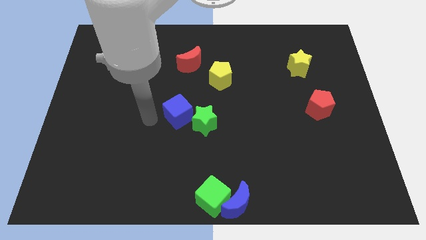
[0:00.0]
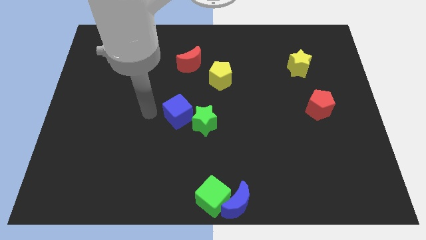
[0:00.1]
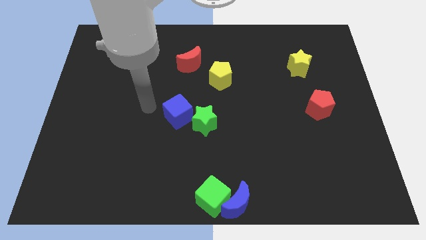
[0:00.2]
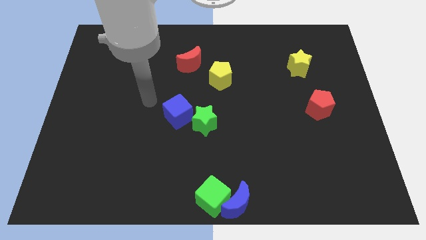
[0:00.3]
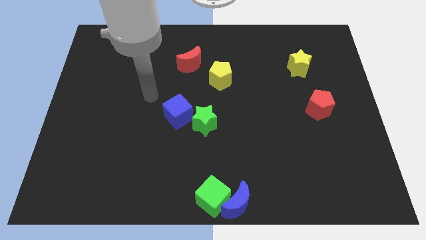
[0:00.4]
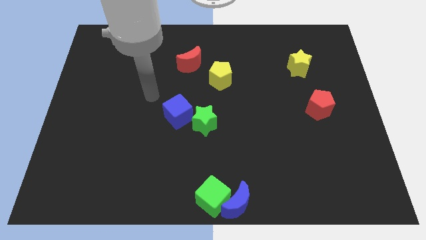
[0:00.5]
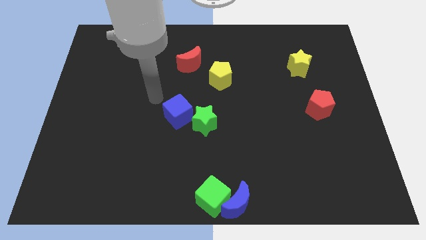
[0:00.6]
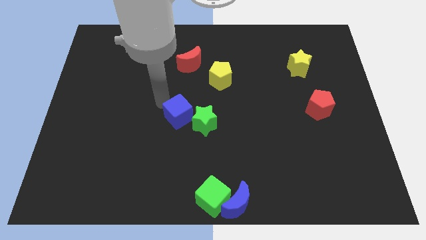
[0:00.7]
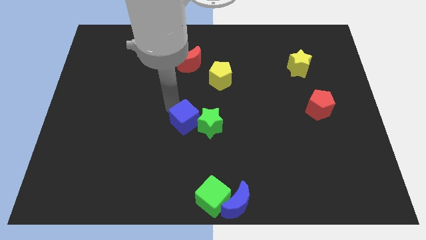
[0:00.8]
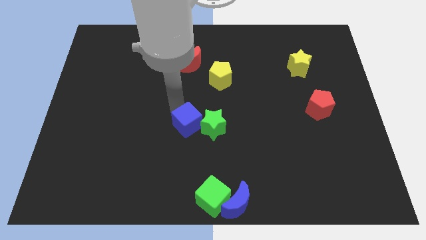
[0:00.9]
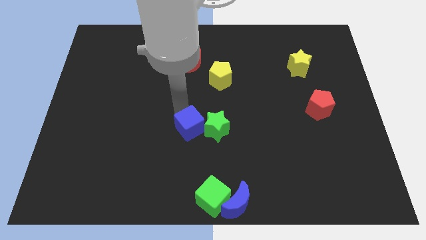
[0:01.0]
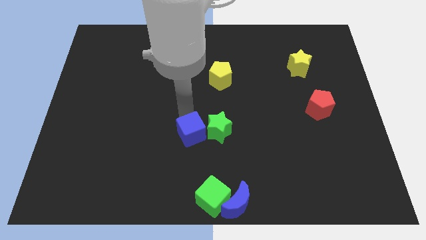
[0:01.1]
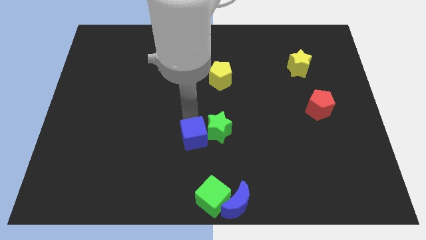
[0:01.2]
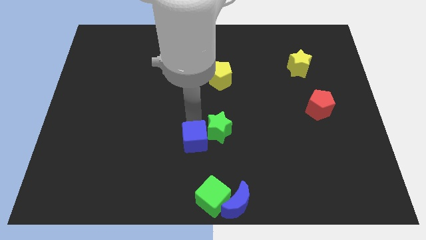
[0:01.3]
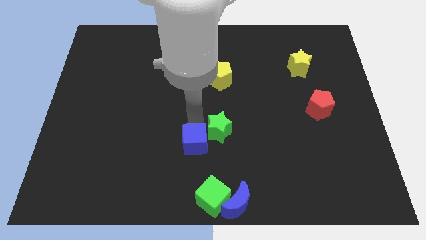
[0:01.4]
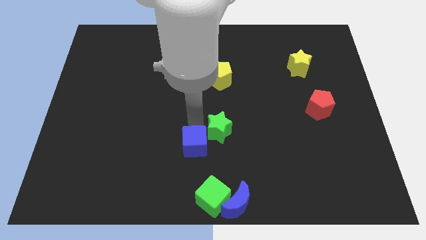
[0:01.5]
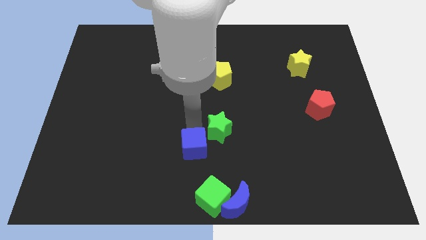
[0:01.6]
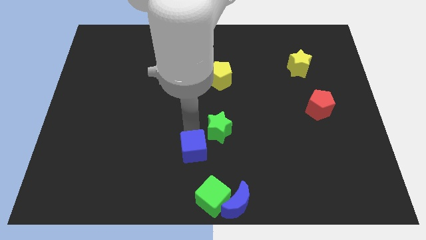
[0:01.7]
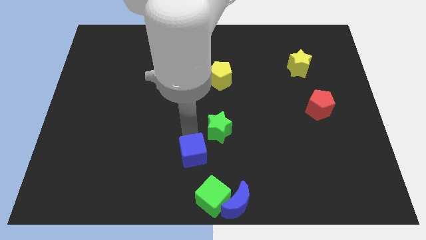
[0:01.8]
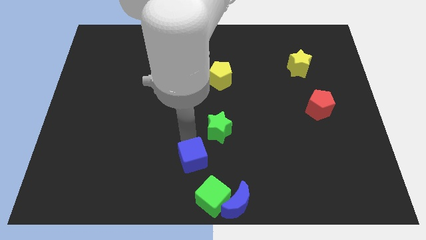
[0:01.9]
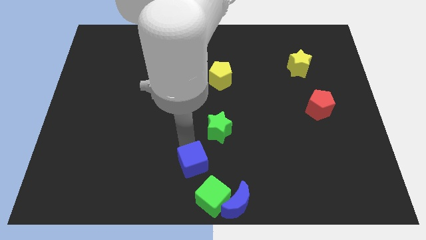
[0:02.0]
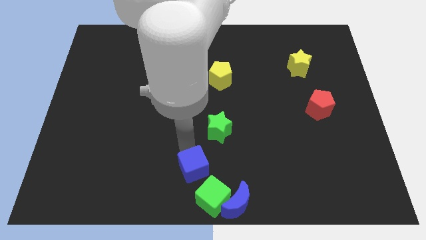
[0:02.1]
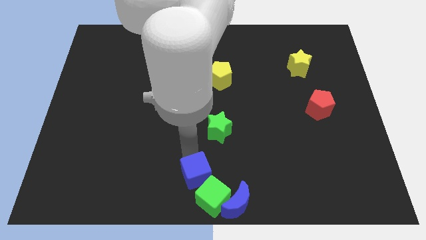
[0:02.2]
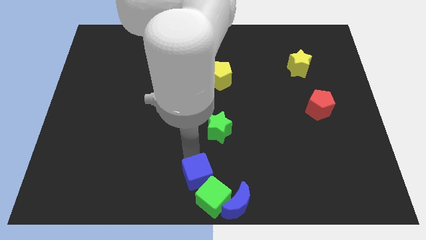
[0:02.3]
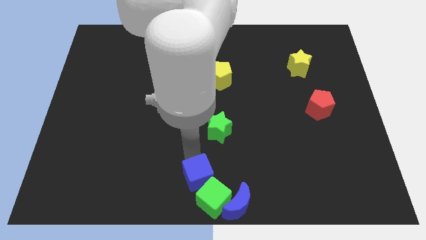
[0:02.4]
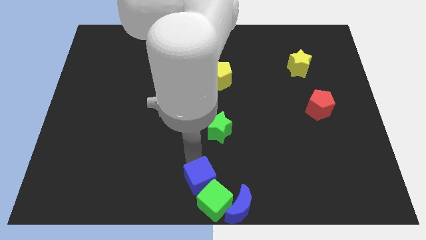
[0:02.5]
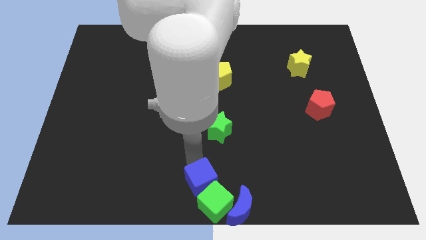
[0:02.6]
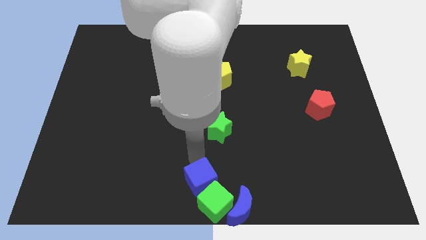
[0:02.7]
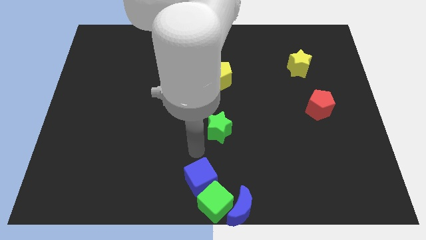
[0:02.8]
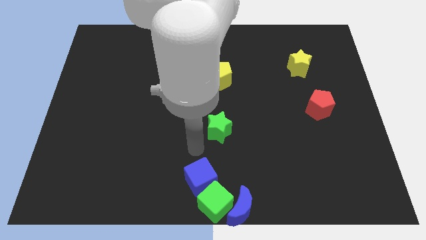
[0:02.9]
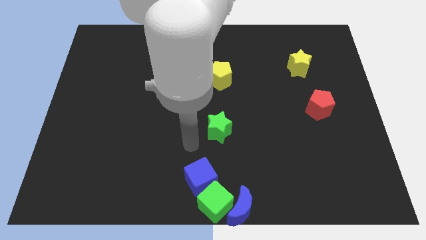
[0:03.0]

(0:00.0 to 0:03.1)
separate blue cube from green star

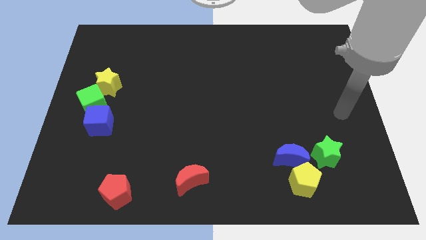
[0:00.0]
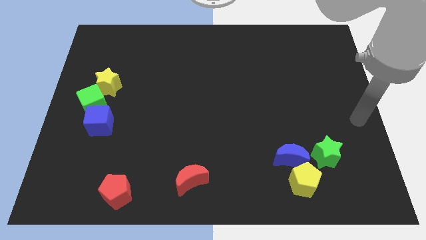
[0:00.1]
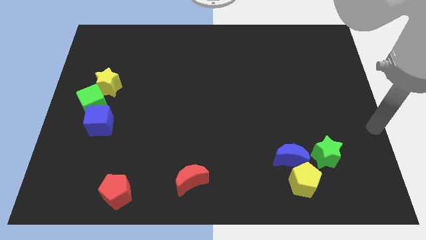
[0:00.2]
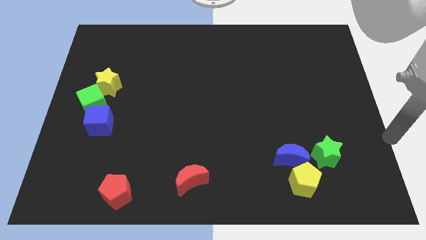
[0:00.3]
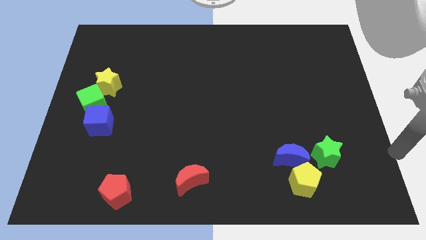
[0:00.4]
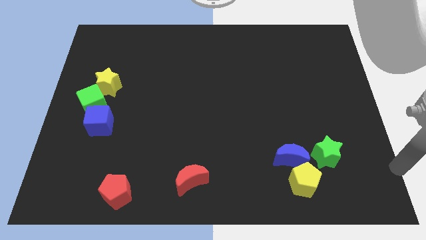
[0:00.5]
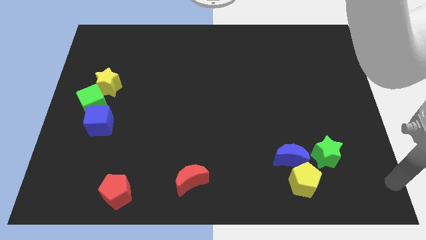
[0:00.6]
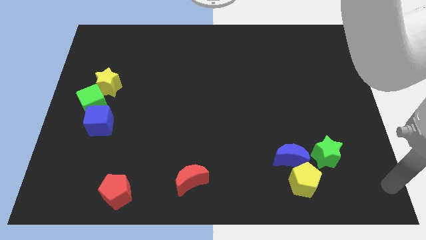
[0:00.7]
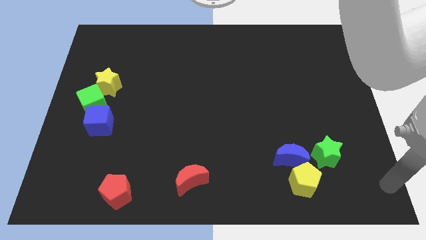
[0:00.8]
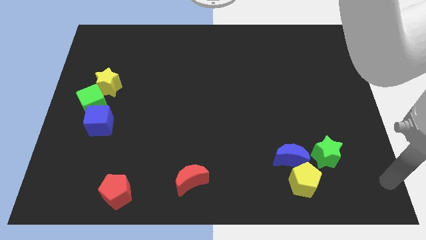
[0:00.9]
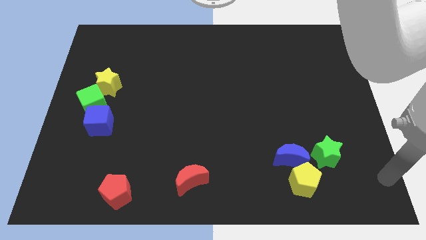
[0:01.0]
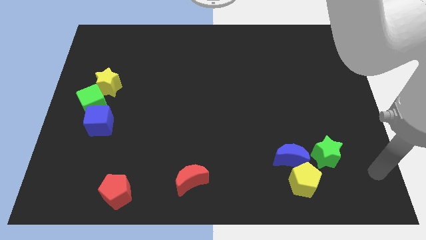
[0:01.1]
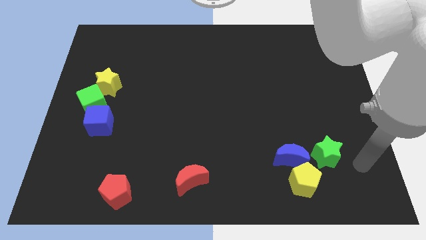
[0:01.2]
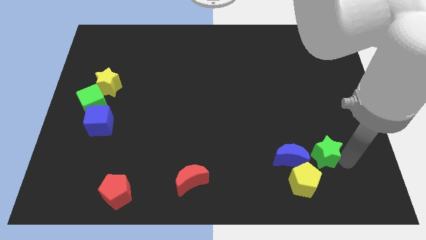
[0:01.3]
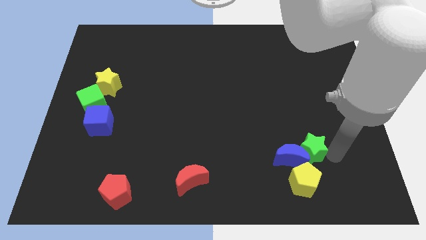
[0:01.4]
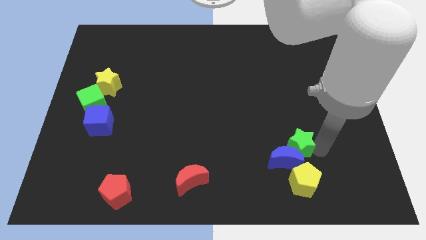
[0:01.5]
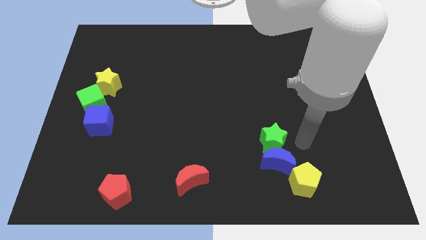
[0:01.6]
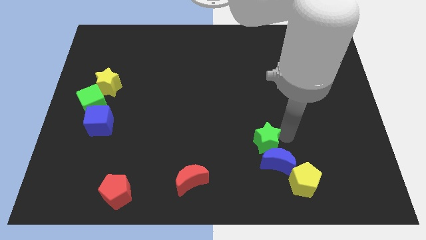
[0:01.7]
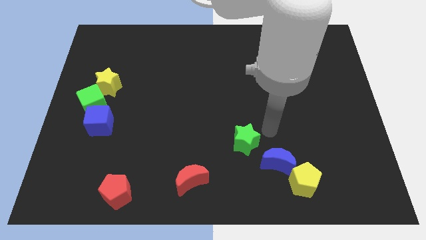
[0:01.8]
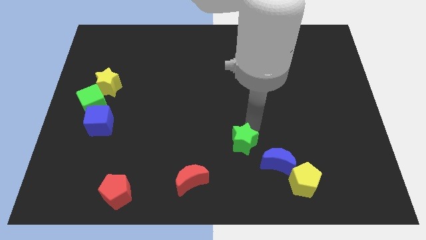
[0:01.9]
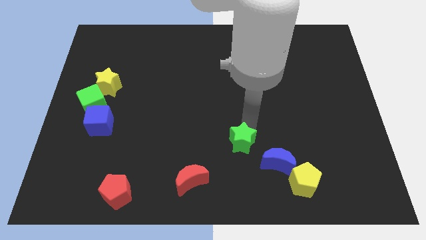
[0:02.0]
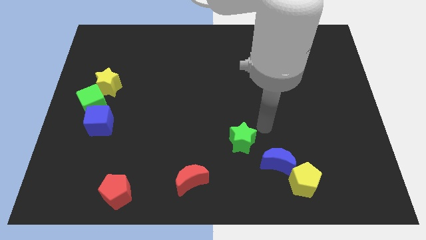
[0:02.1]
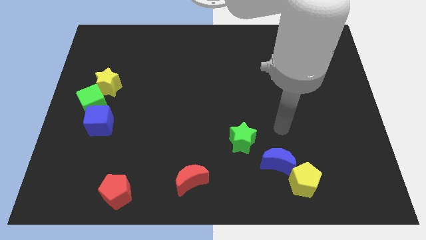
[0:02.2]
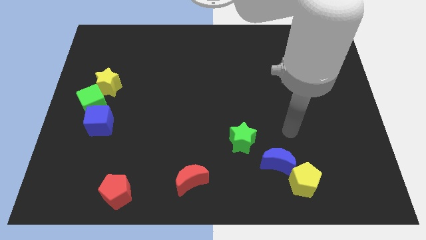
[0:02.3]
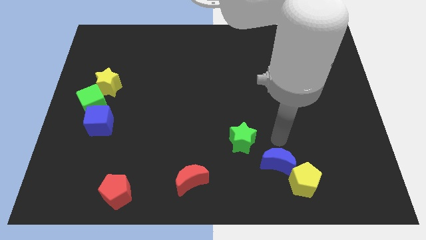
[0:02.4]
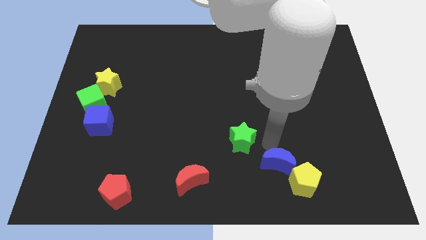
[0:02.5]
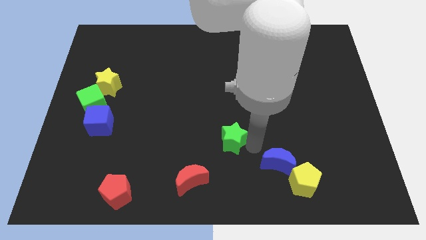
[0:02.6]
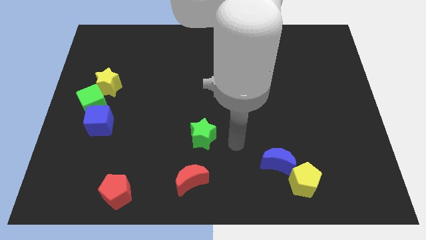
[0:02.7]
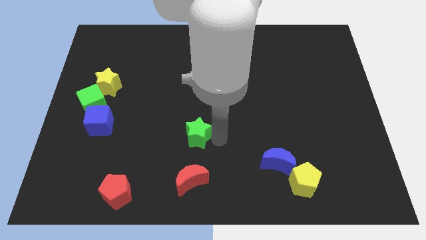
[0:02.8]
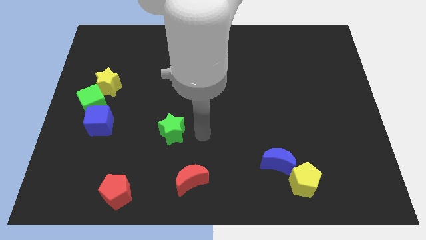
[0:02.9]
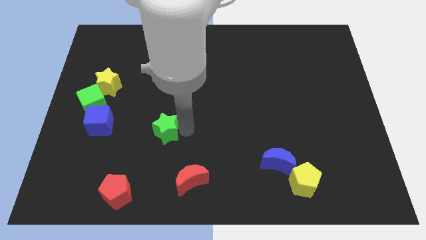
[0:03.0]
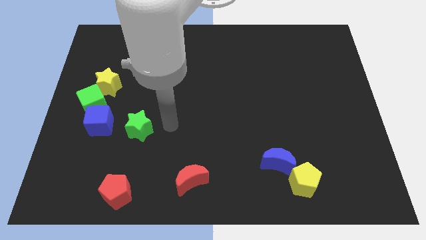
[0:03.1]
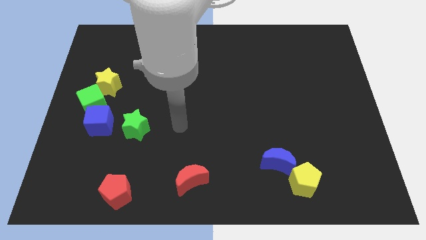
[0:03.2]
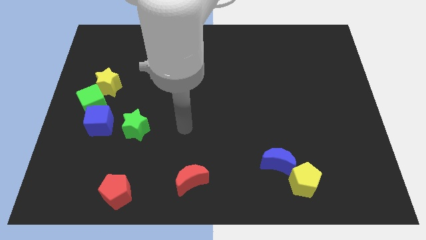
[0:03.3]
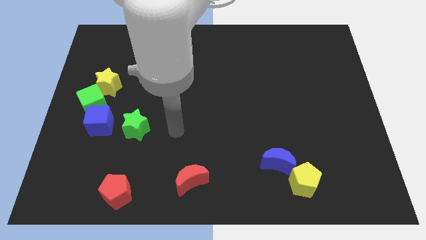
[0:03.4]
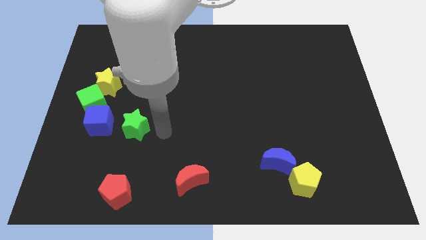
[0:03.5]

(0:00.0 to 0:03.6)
move green star to the right of blue cube

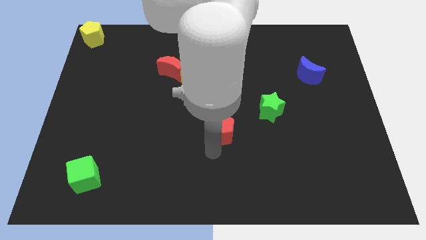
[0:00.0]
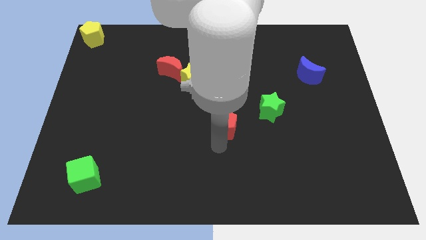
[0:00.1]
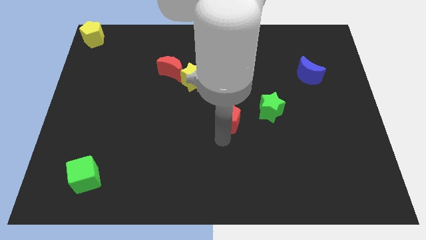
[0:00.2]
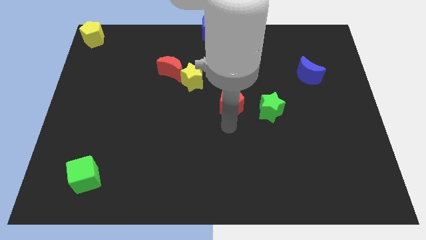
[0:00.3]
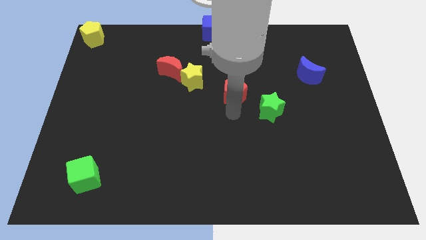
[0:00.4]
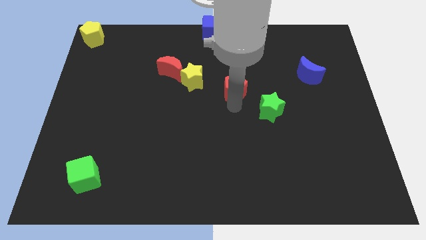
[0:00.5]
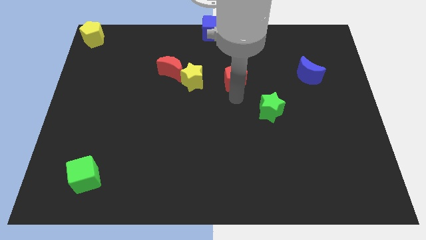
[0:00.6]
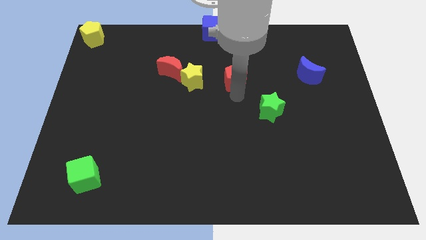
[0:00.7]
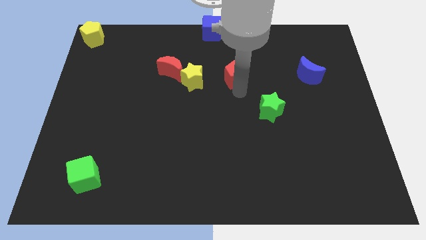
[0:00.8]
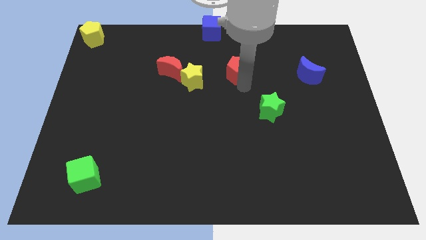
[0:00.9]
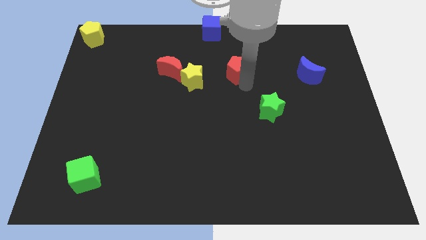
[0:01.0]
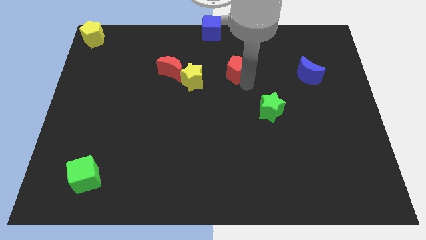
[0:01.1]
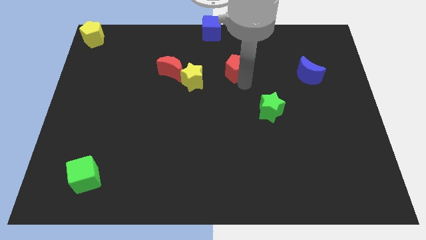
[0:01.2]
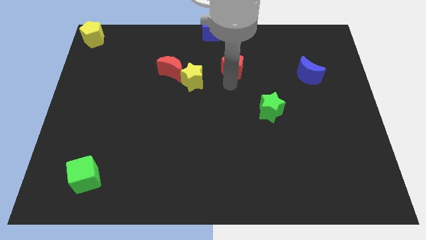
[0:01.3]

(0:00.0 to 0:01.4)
move red pentagon slightly up

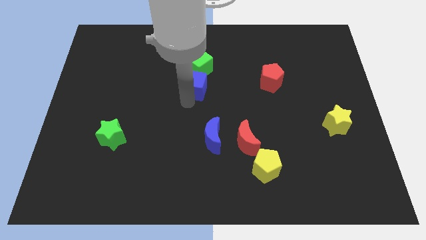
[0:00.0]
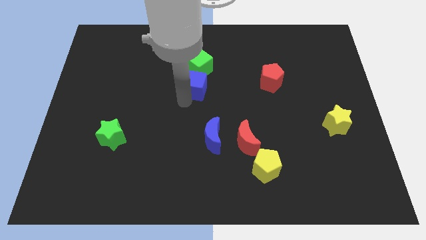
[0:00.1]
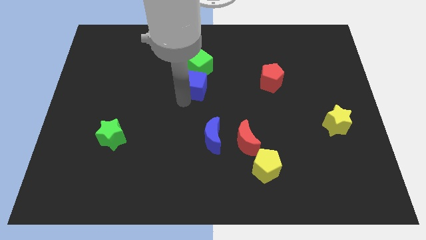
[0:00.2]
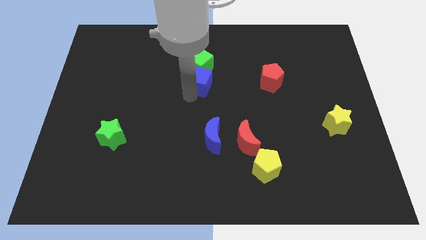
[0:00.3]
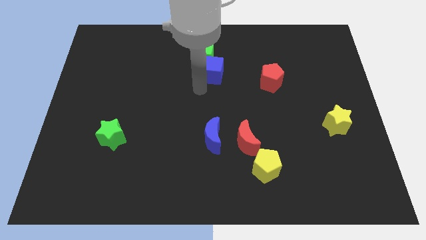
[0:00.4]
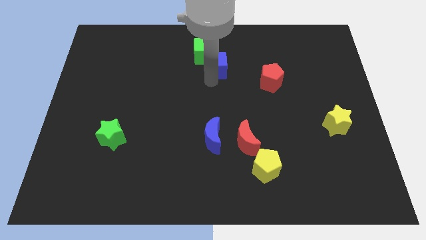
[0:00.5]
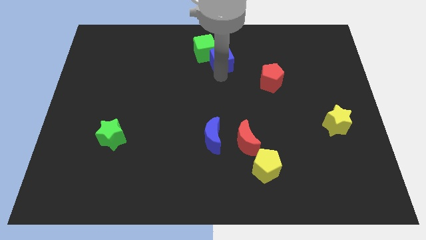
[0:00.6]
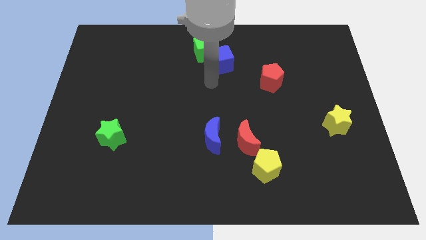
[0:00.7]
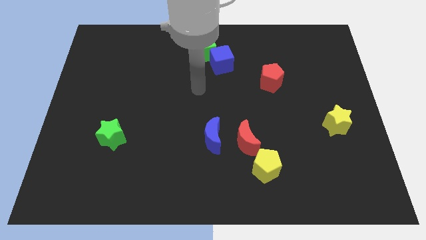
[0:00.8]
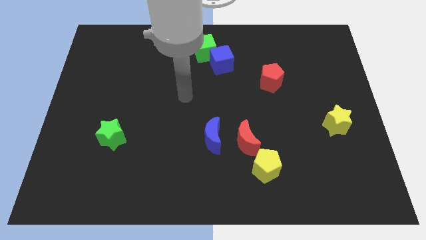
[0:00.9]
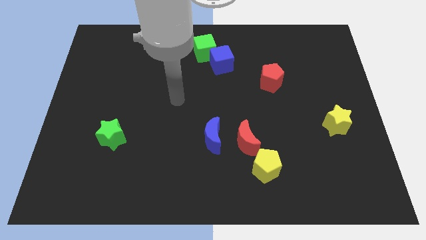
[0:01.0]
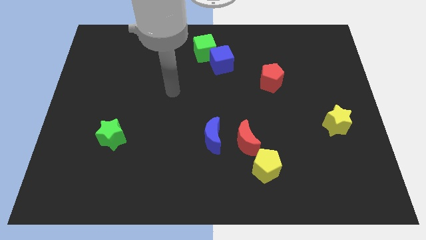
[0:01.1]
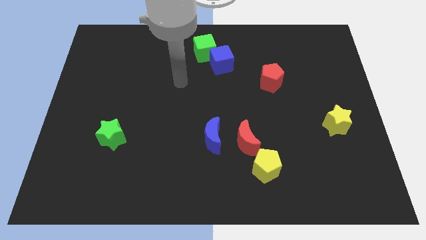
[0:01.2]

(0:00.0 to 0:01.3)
move the blue cube and green cube towards the top center of the board
